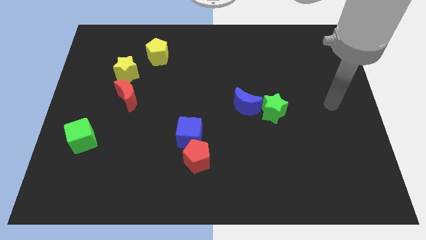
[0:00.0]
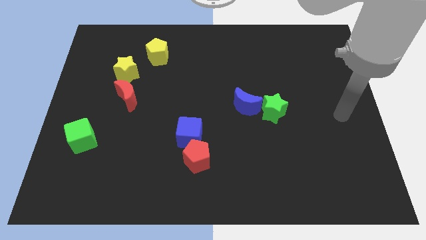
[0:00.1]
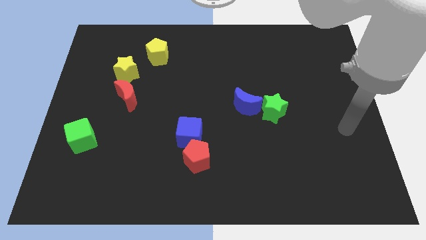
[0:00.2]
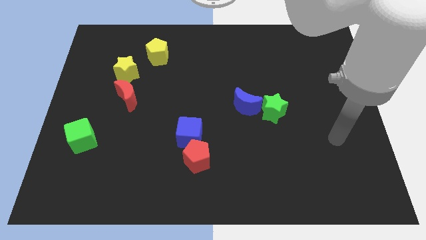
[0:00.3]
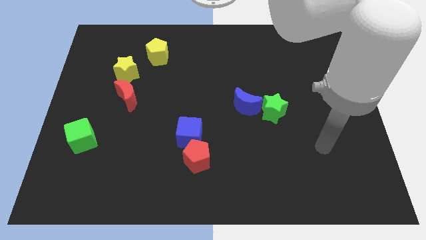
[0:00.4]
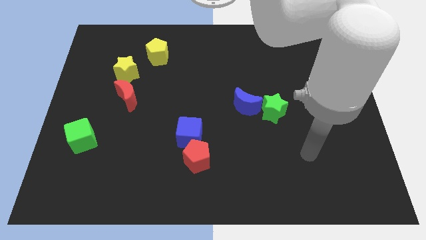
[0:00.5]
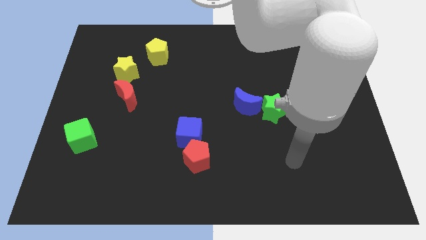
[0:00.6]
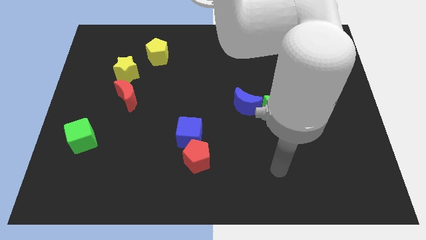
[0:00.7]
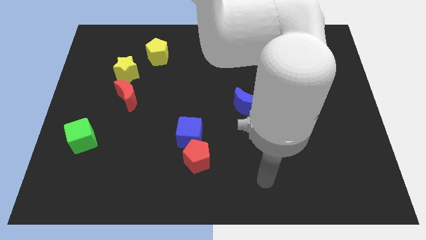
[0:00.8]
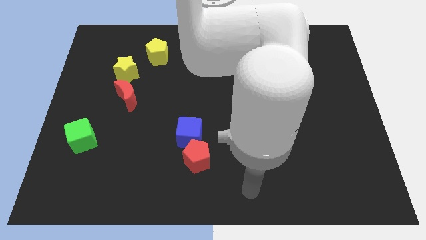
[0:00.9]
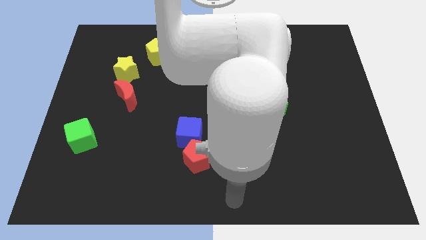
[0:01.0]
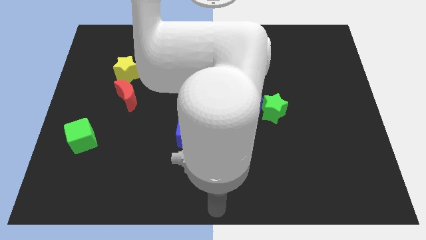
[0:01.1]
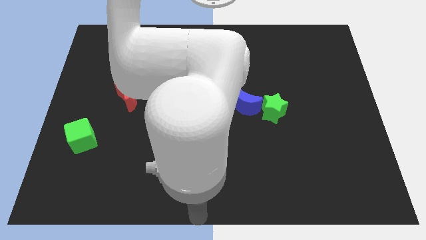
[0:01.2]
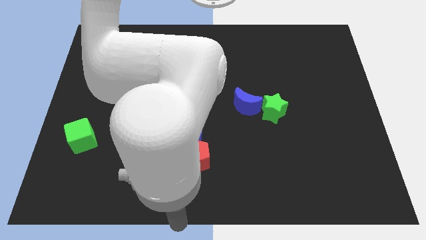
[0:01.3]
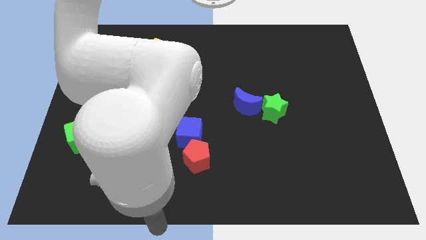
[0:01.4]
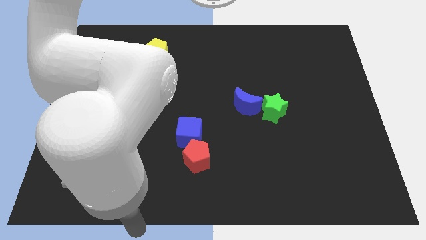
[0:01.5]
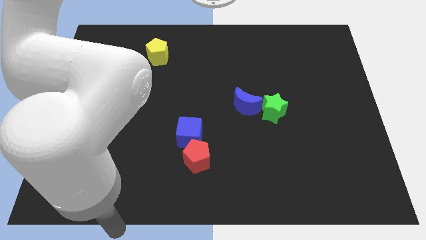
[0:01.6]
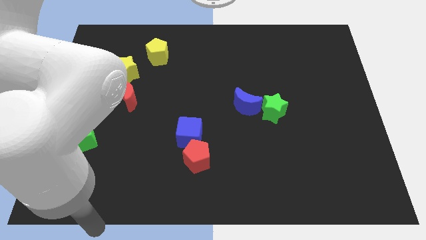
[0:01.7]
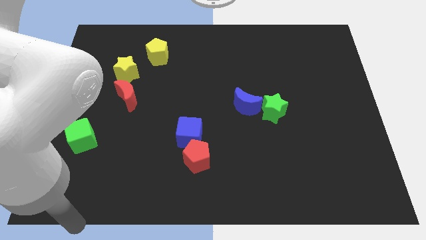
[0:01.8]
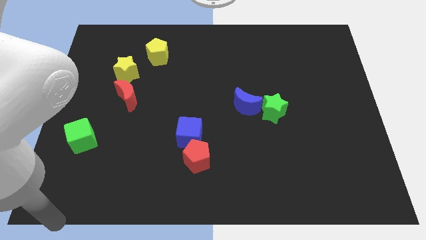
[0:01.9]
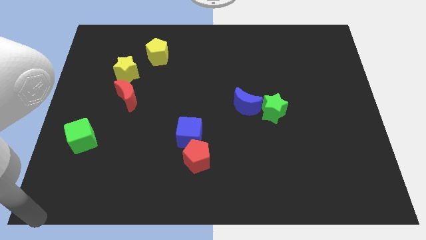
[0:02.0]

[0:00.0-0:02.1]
move your hand to the bottom left corner

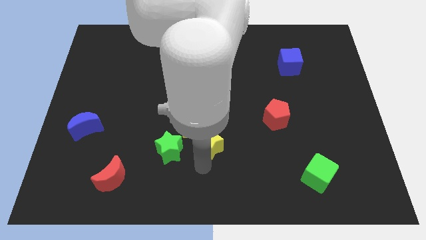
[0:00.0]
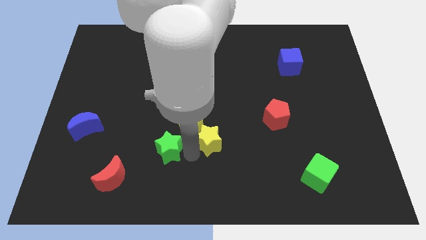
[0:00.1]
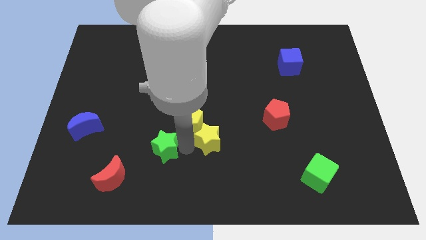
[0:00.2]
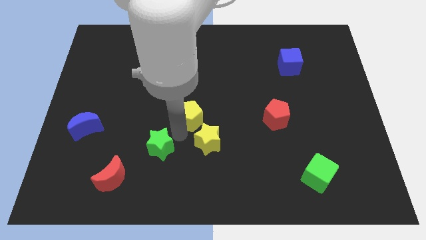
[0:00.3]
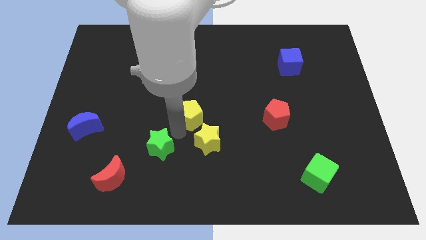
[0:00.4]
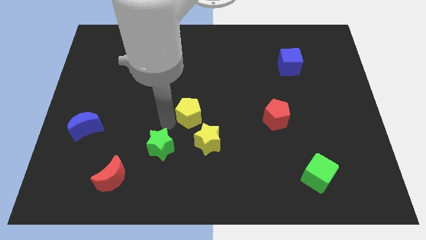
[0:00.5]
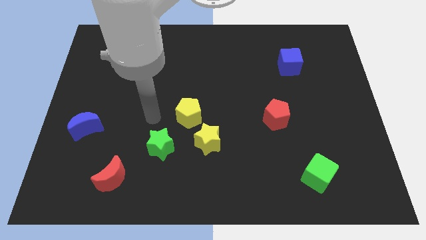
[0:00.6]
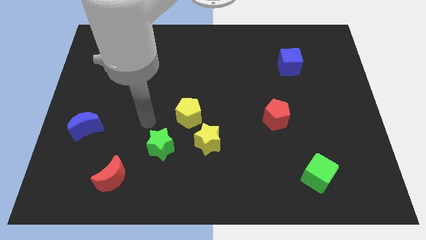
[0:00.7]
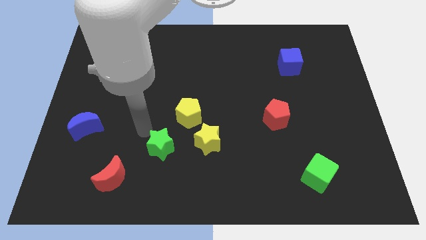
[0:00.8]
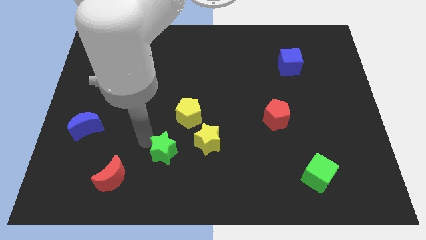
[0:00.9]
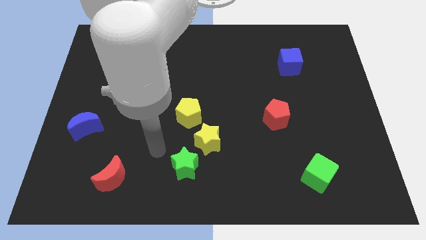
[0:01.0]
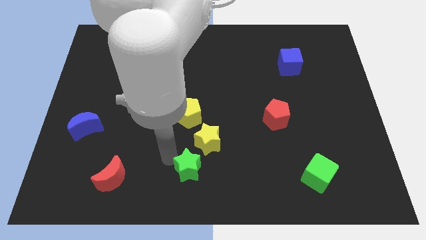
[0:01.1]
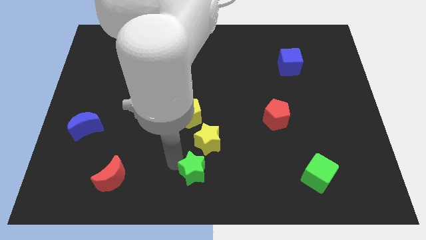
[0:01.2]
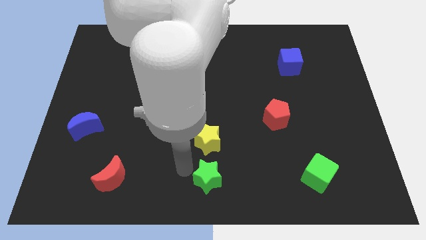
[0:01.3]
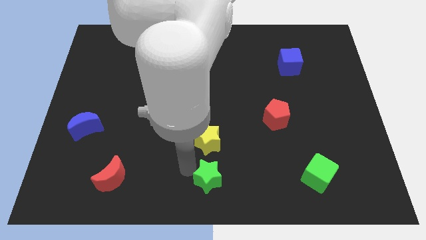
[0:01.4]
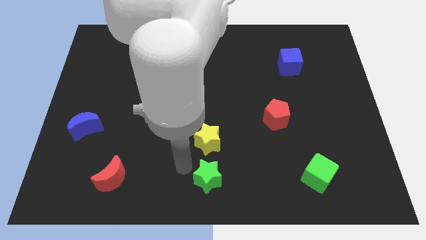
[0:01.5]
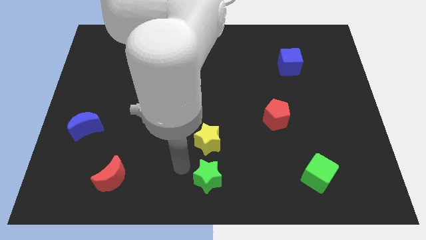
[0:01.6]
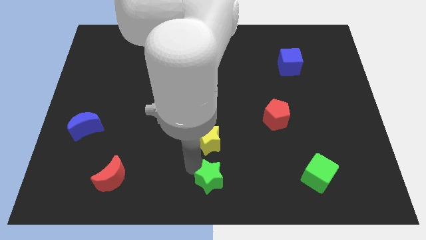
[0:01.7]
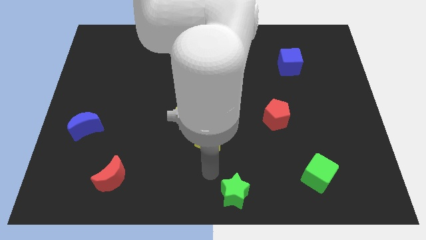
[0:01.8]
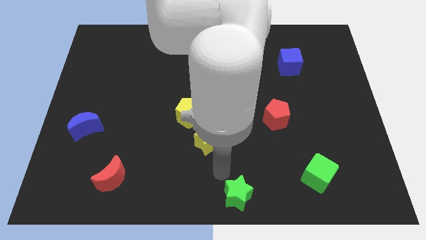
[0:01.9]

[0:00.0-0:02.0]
slide the green star to the bottom centre of the board

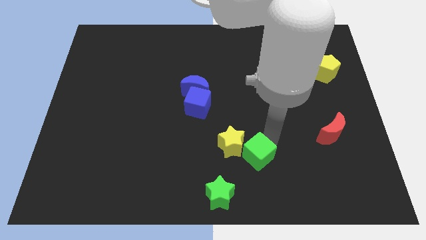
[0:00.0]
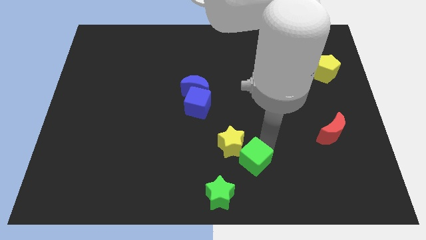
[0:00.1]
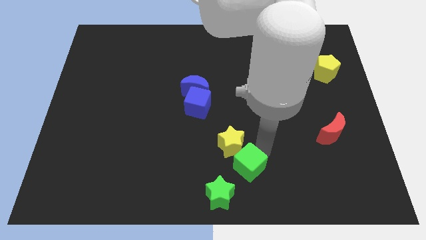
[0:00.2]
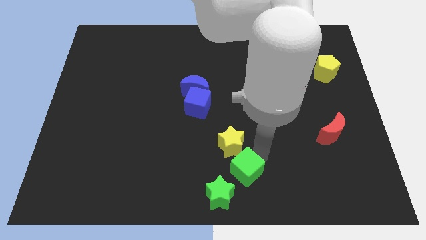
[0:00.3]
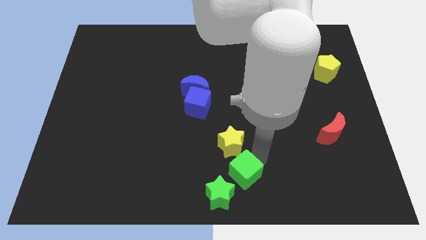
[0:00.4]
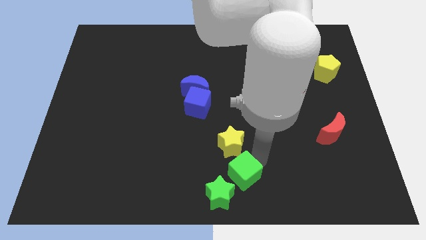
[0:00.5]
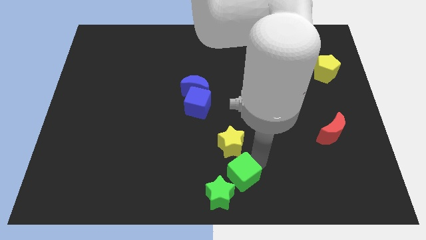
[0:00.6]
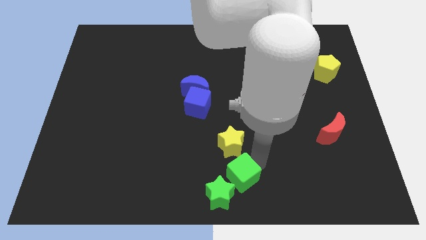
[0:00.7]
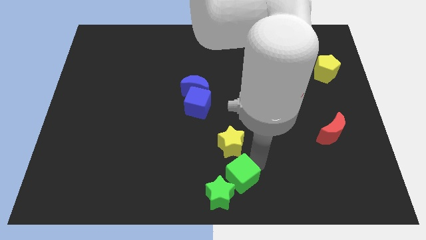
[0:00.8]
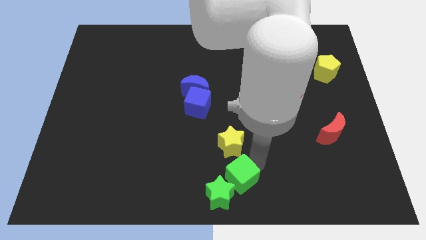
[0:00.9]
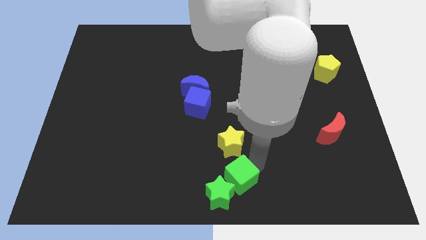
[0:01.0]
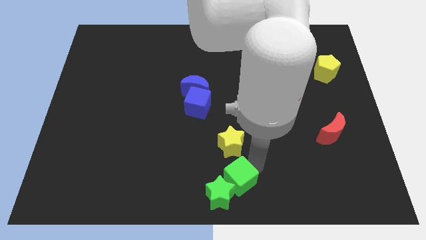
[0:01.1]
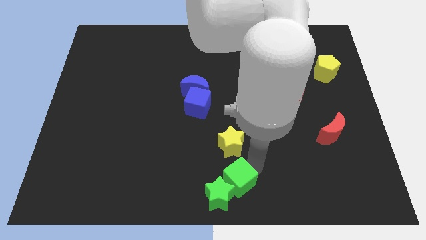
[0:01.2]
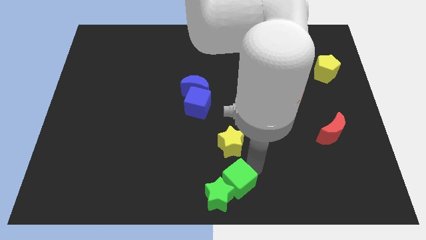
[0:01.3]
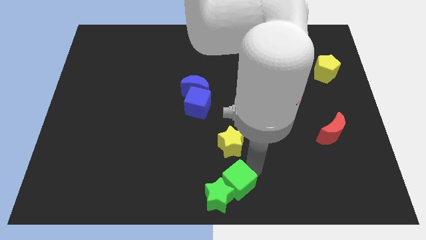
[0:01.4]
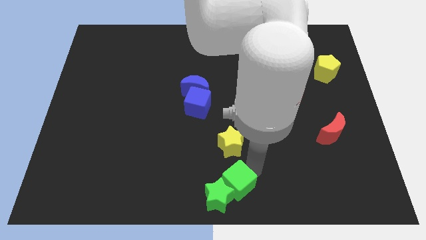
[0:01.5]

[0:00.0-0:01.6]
move the green cube into the green star

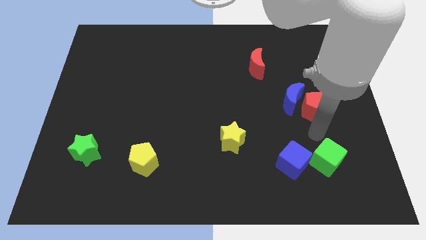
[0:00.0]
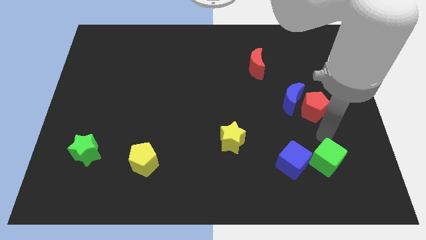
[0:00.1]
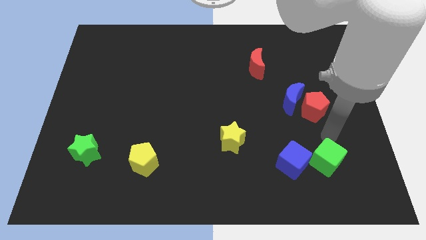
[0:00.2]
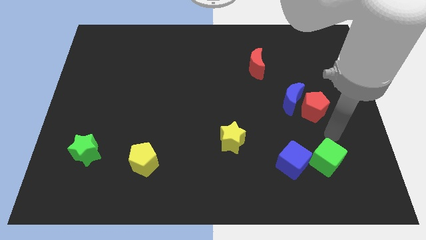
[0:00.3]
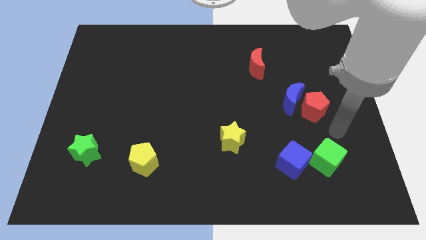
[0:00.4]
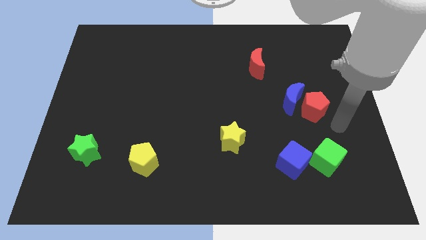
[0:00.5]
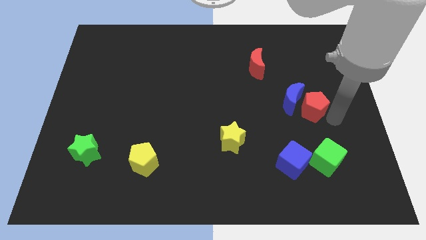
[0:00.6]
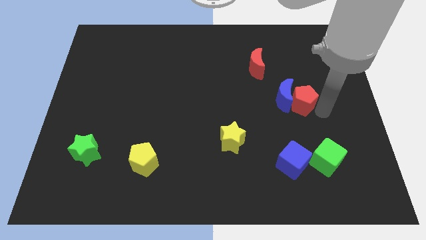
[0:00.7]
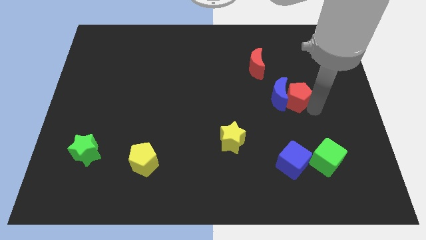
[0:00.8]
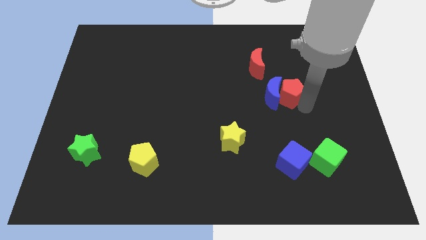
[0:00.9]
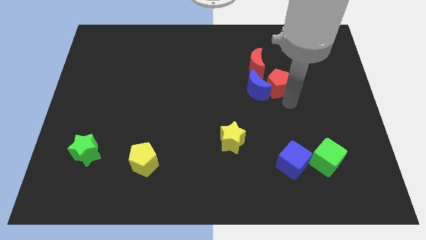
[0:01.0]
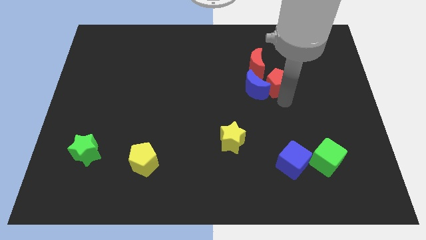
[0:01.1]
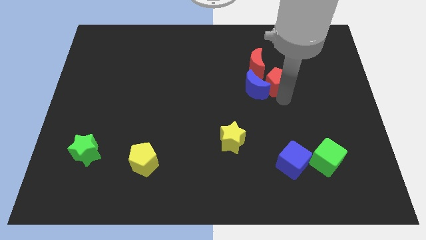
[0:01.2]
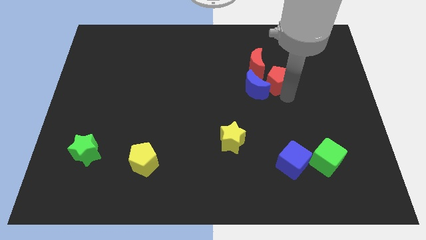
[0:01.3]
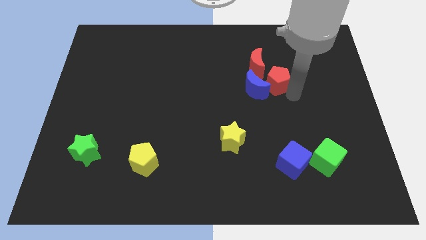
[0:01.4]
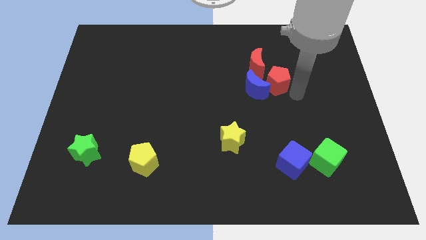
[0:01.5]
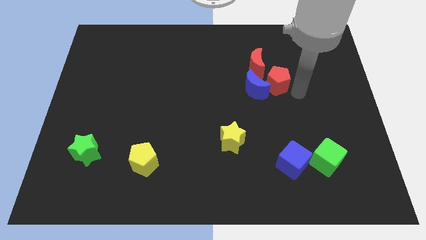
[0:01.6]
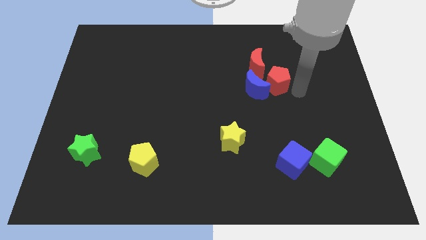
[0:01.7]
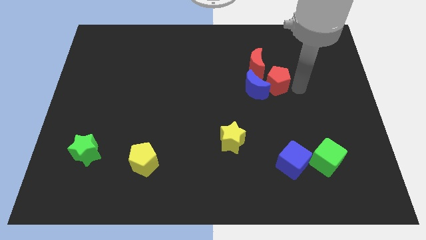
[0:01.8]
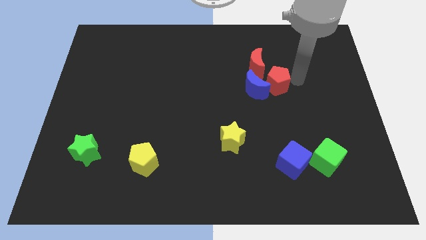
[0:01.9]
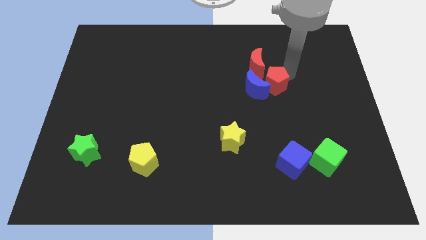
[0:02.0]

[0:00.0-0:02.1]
push the red pentagon into the blue crescent

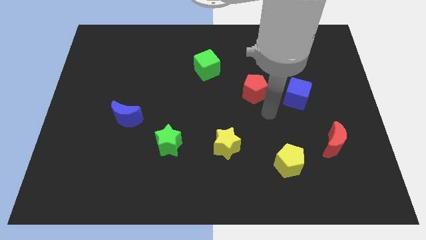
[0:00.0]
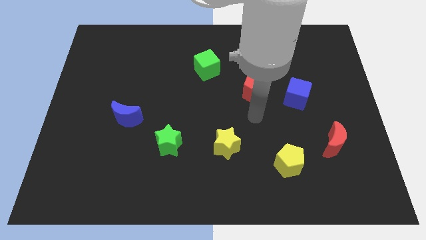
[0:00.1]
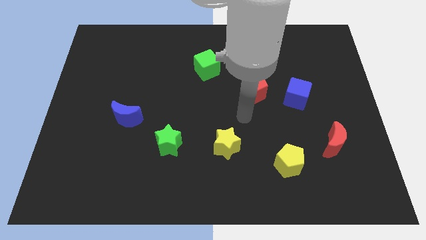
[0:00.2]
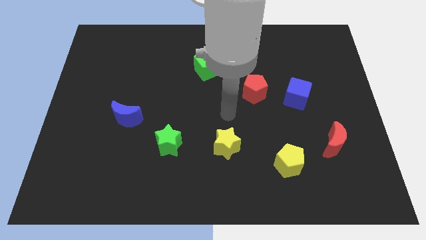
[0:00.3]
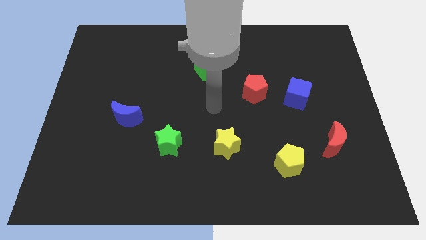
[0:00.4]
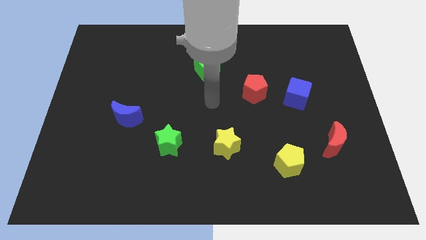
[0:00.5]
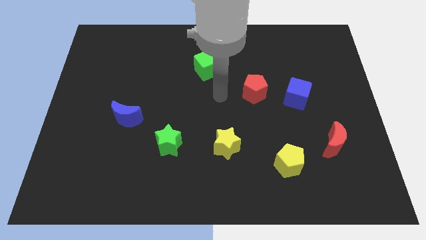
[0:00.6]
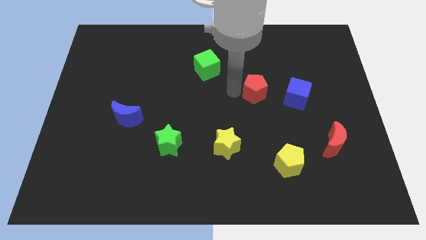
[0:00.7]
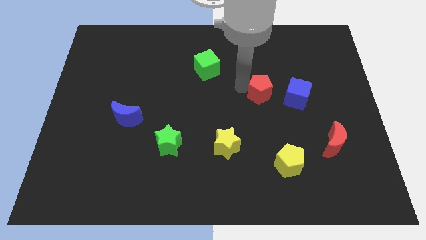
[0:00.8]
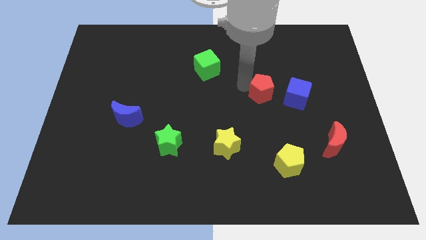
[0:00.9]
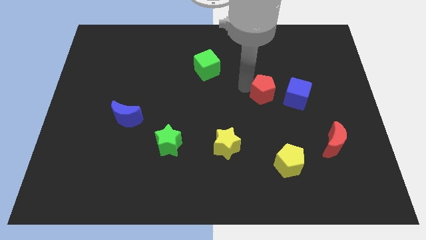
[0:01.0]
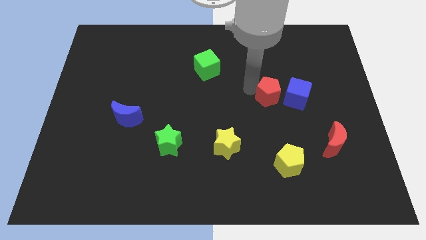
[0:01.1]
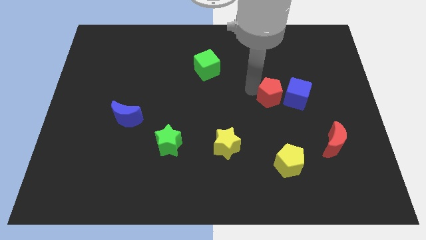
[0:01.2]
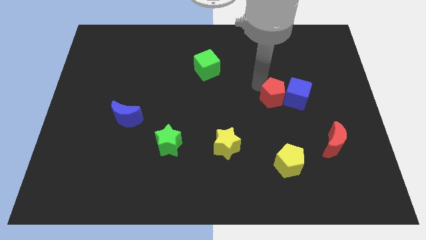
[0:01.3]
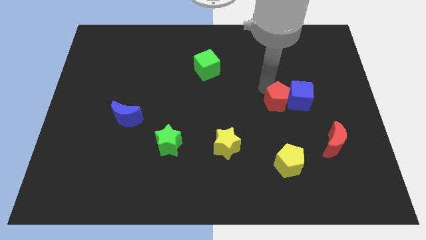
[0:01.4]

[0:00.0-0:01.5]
move the red pentagon left to the blue cube
